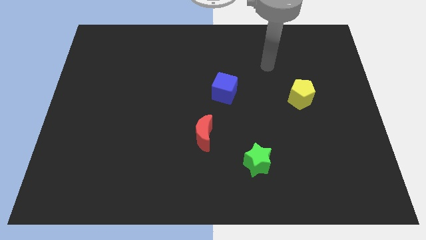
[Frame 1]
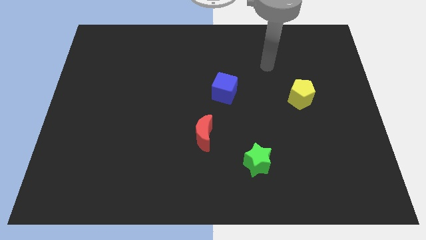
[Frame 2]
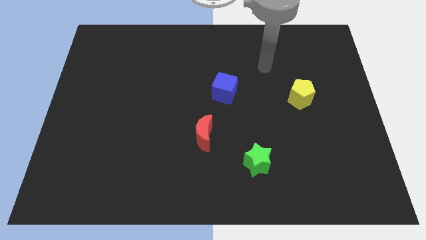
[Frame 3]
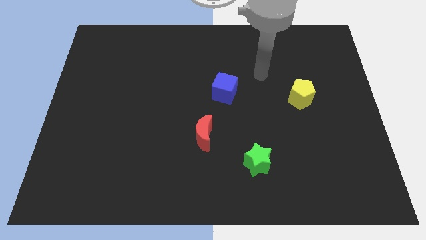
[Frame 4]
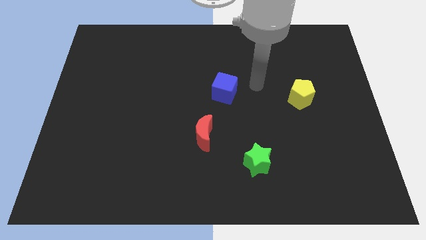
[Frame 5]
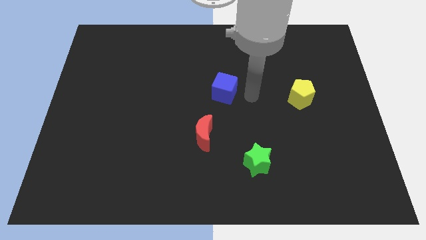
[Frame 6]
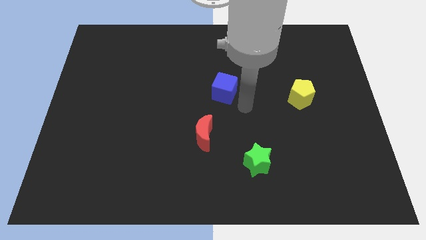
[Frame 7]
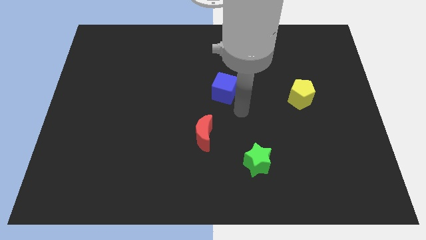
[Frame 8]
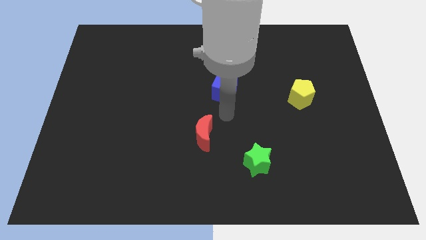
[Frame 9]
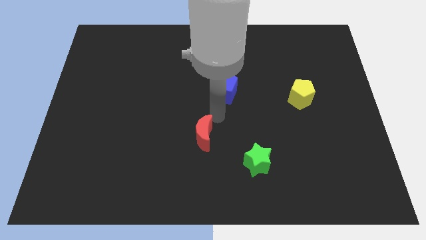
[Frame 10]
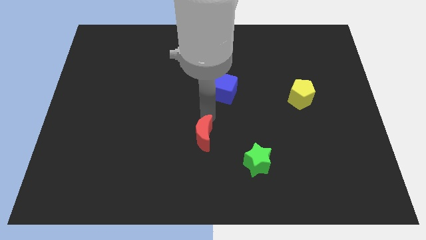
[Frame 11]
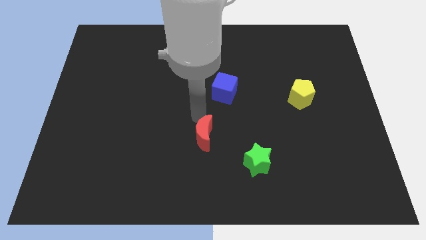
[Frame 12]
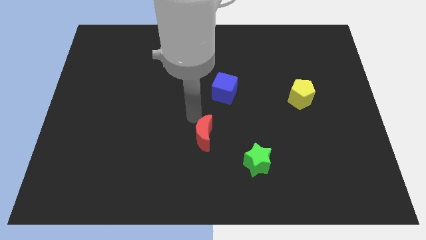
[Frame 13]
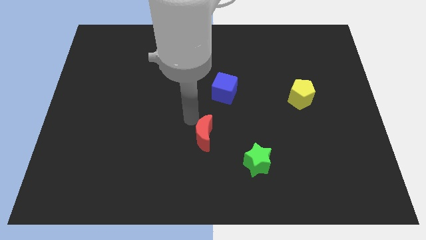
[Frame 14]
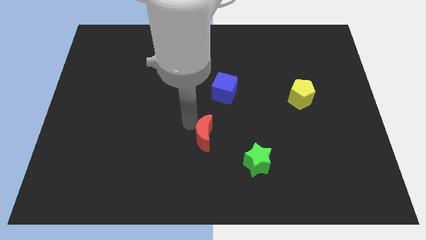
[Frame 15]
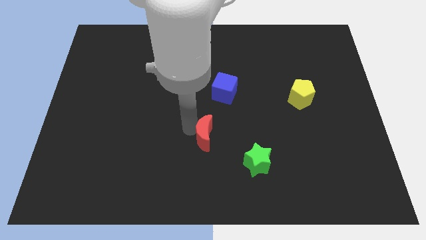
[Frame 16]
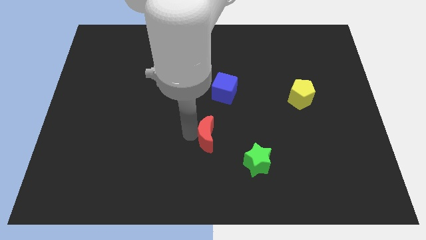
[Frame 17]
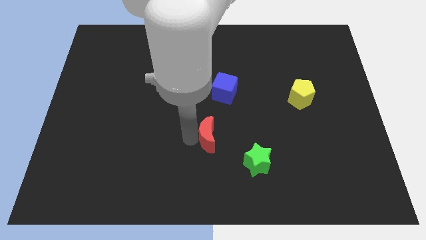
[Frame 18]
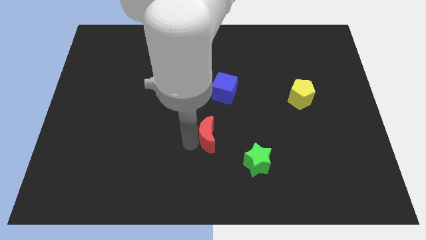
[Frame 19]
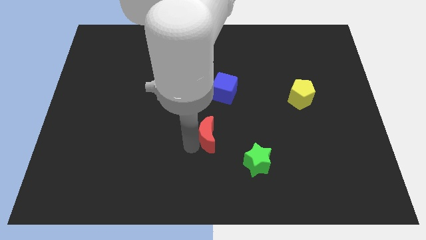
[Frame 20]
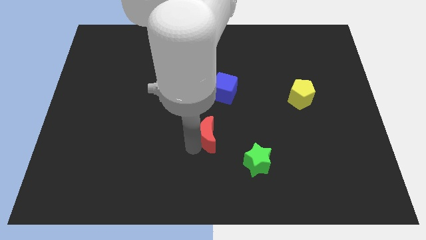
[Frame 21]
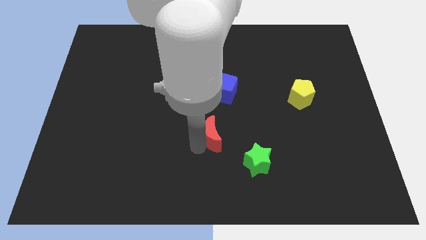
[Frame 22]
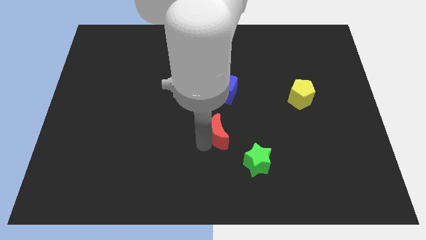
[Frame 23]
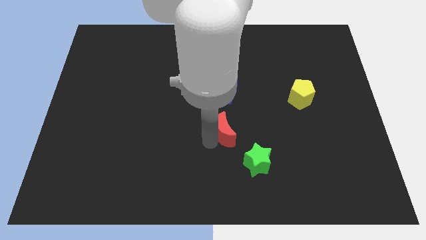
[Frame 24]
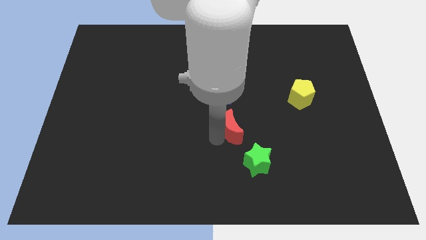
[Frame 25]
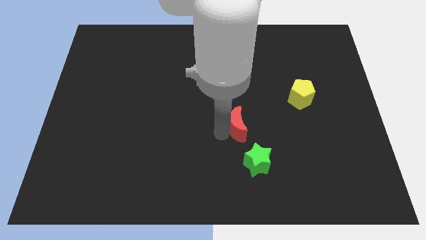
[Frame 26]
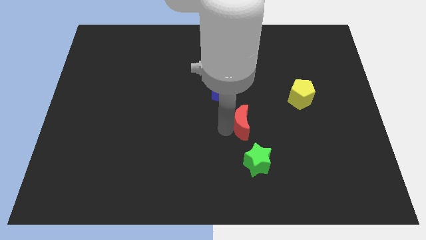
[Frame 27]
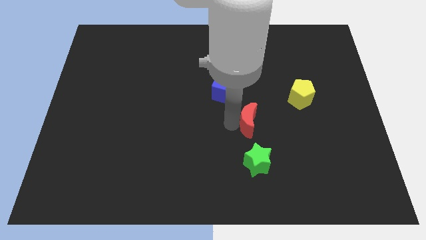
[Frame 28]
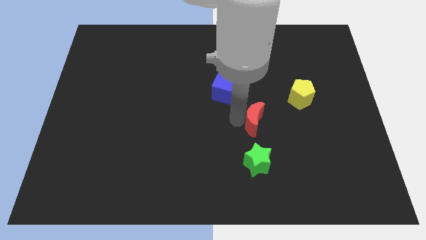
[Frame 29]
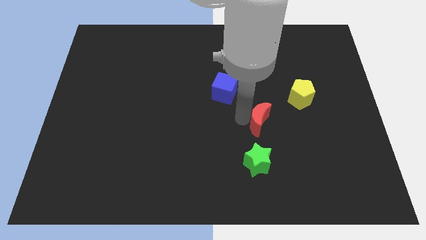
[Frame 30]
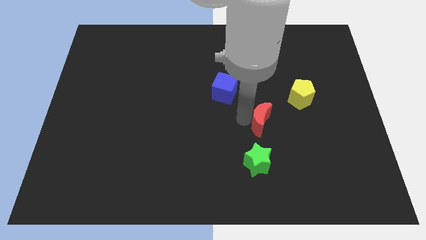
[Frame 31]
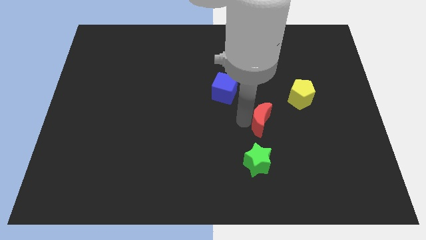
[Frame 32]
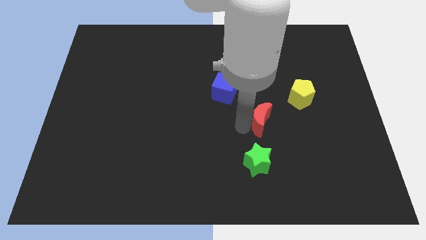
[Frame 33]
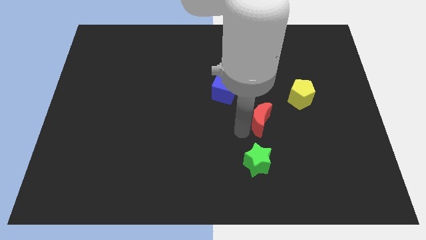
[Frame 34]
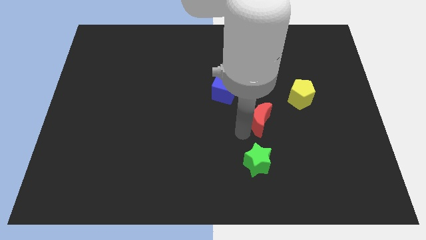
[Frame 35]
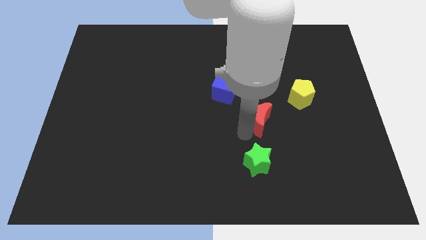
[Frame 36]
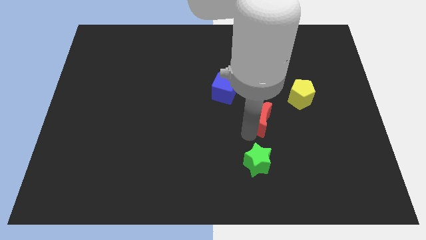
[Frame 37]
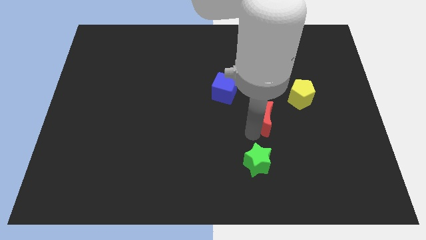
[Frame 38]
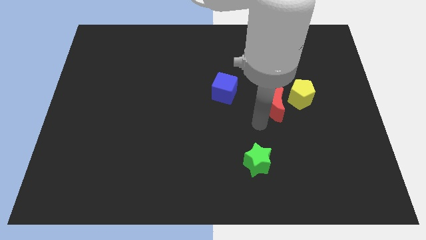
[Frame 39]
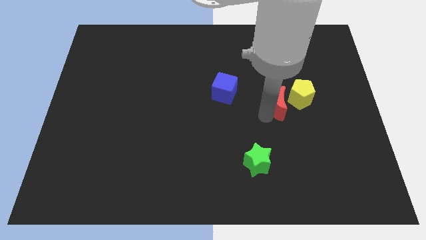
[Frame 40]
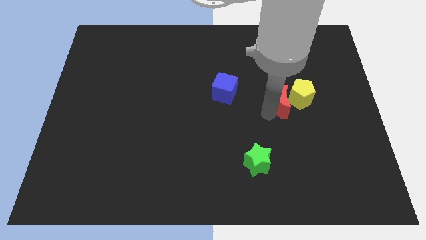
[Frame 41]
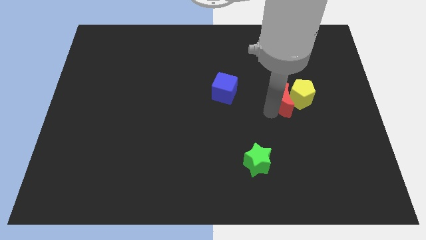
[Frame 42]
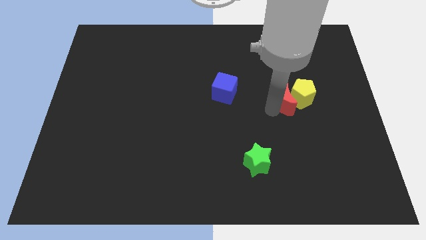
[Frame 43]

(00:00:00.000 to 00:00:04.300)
push the red moon towards the yellow pentagon

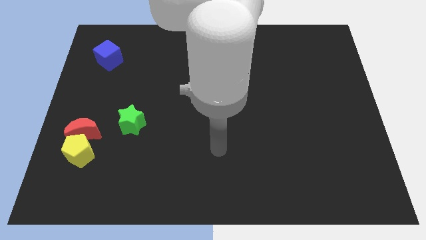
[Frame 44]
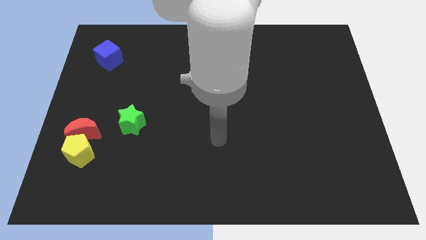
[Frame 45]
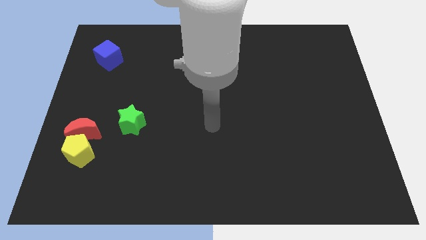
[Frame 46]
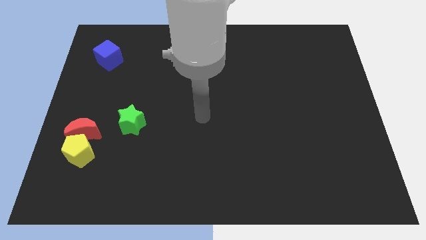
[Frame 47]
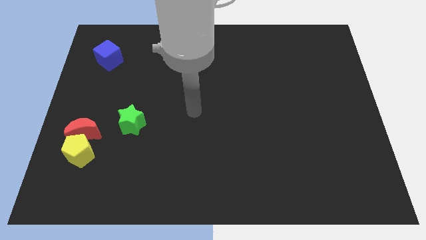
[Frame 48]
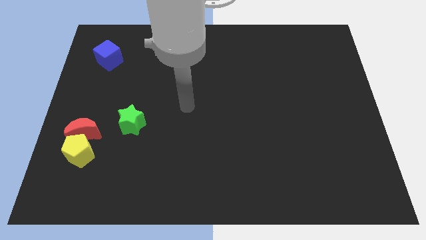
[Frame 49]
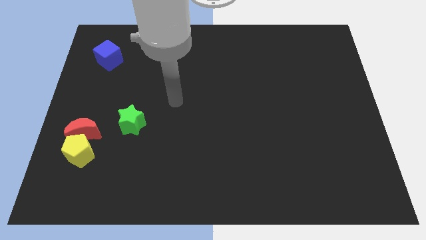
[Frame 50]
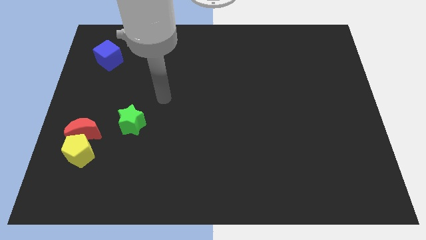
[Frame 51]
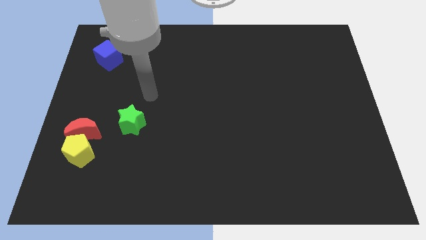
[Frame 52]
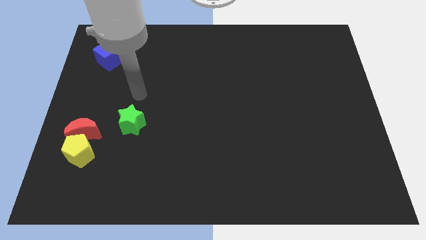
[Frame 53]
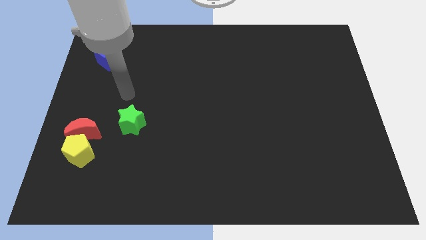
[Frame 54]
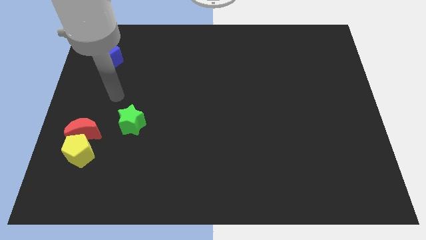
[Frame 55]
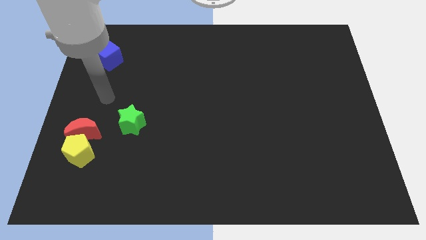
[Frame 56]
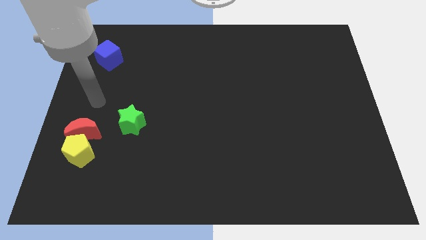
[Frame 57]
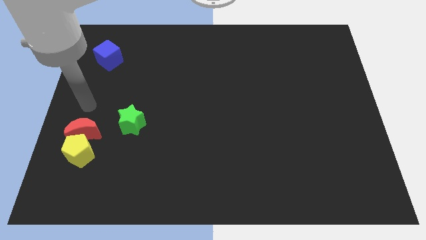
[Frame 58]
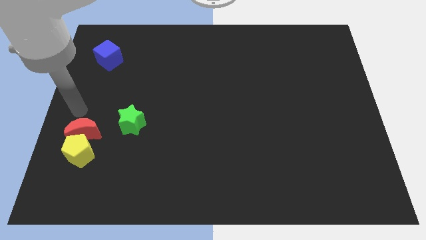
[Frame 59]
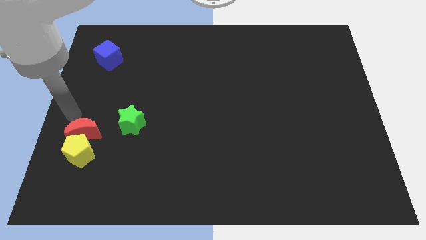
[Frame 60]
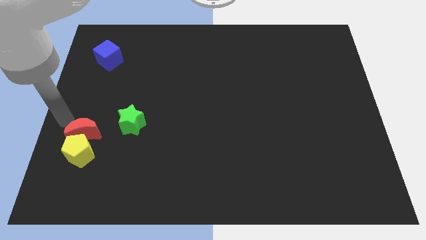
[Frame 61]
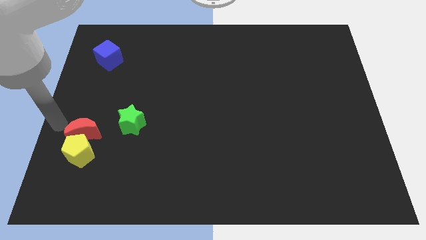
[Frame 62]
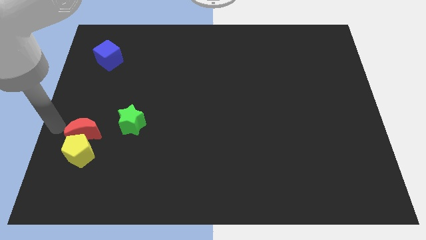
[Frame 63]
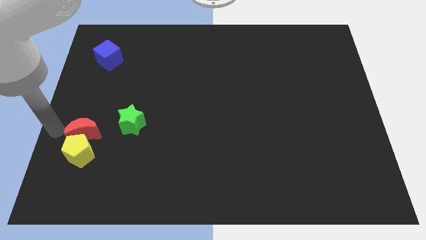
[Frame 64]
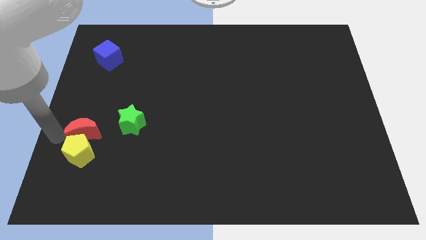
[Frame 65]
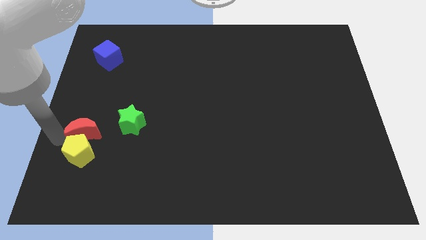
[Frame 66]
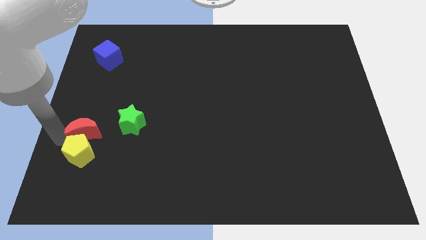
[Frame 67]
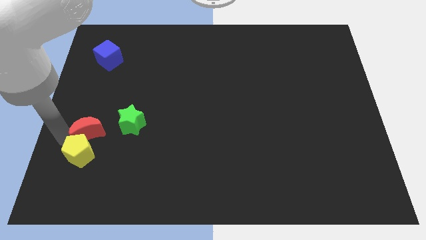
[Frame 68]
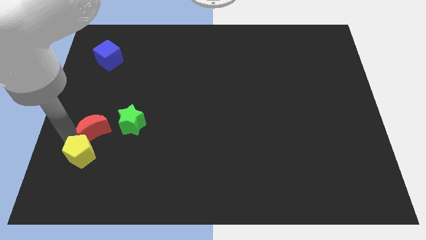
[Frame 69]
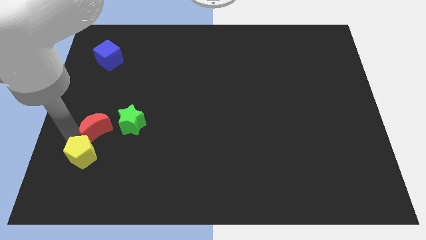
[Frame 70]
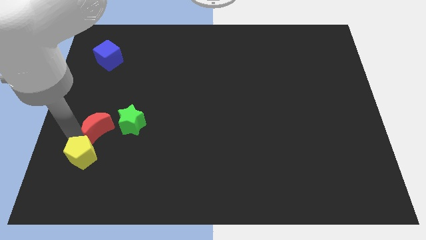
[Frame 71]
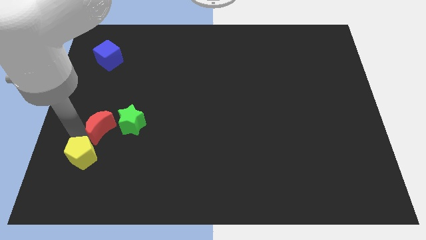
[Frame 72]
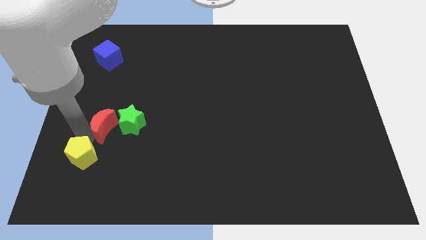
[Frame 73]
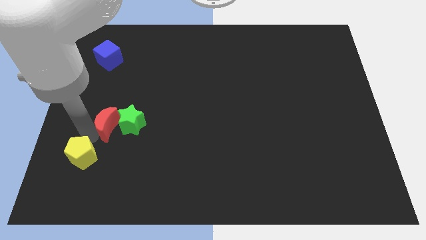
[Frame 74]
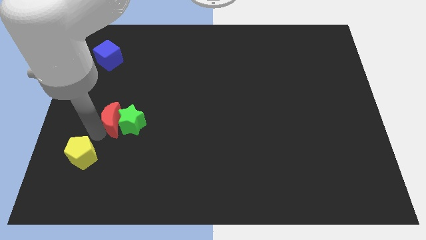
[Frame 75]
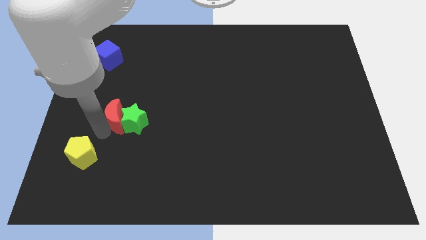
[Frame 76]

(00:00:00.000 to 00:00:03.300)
push the red moon next to the green block

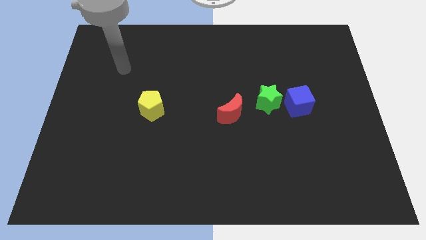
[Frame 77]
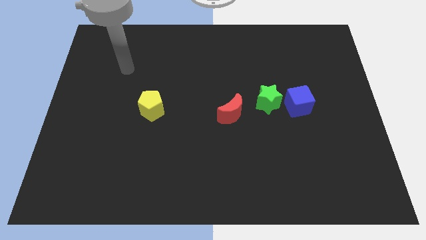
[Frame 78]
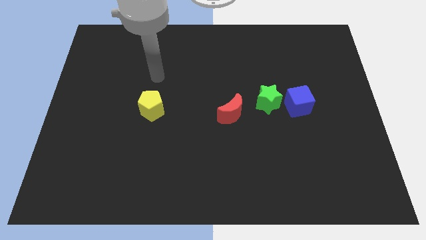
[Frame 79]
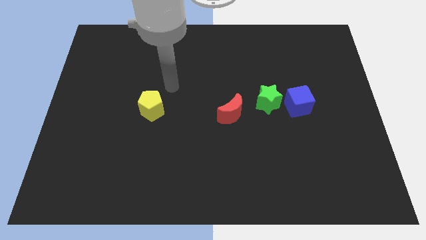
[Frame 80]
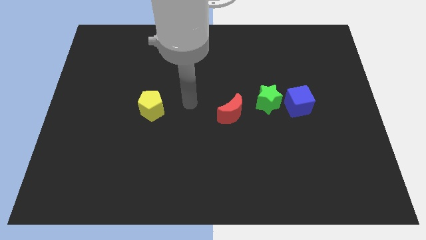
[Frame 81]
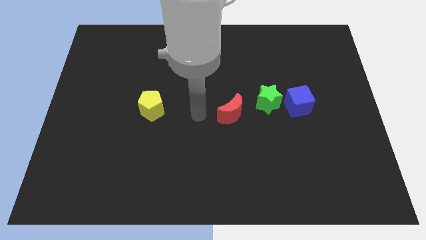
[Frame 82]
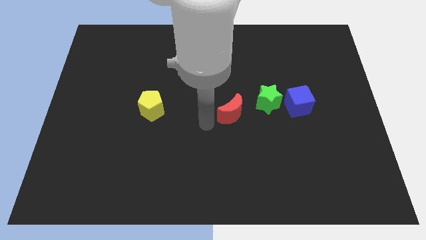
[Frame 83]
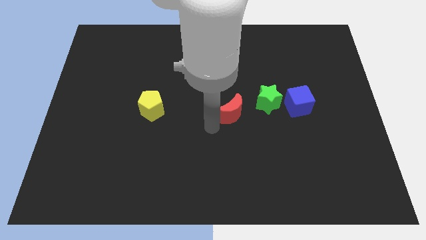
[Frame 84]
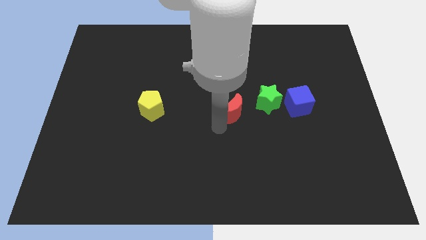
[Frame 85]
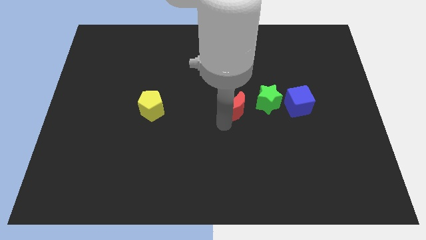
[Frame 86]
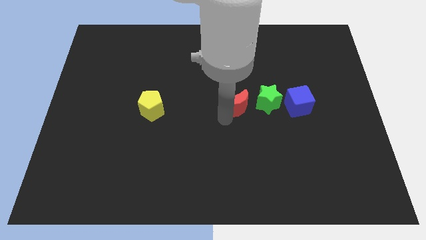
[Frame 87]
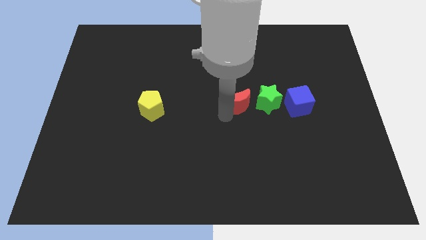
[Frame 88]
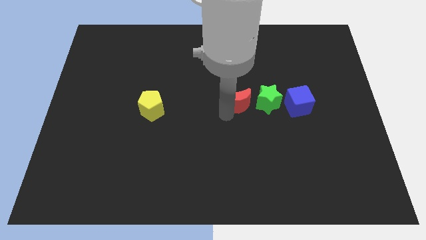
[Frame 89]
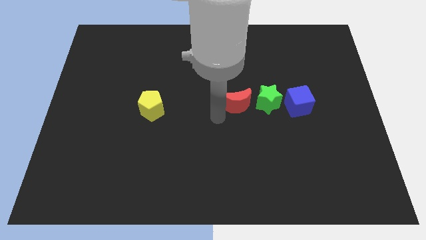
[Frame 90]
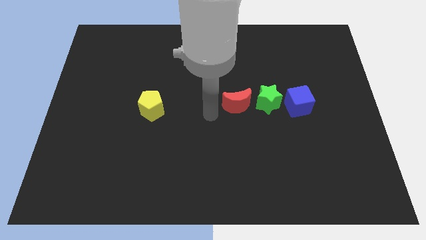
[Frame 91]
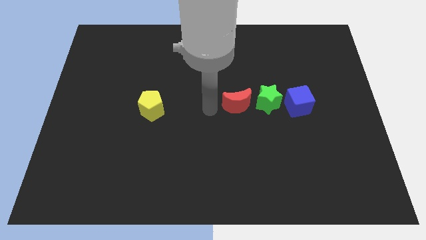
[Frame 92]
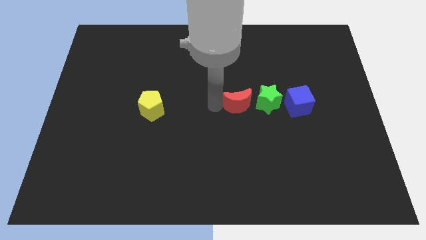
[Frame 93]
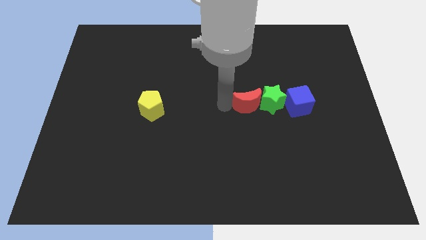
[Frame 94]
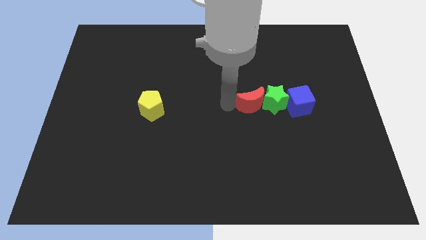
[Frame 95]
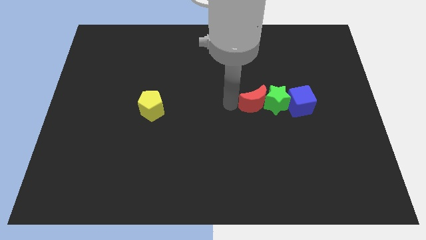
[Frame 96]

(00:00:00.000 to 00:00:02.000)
move the red moon next to the green star
